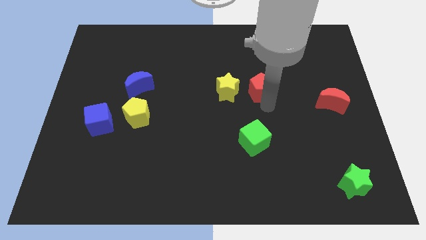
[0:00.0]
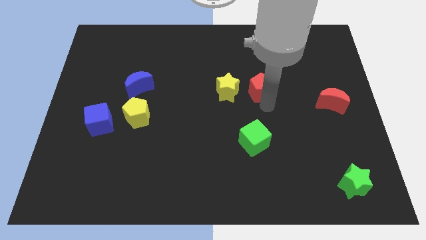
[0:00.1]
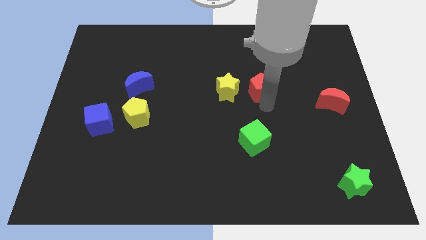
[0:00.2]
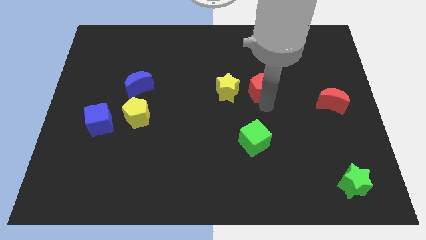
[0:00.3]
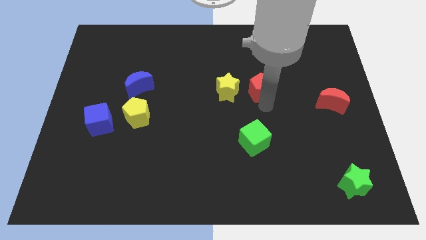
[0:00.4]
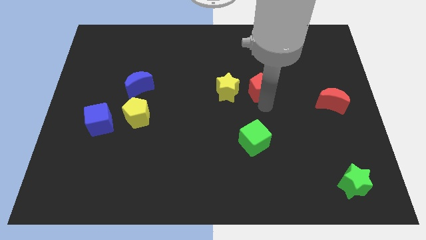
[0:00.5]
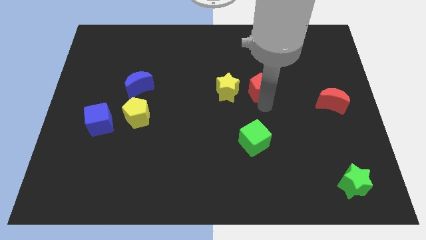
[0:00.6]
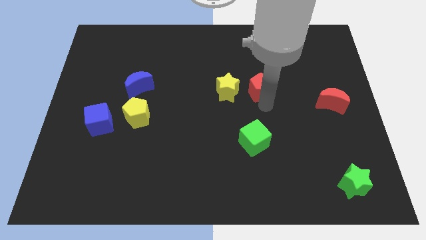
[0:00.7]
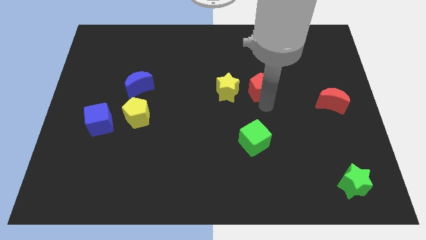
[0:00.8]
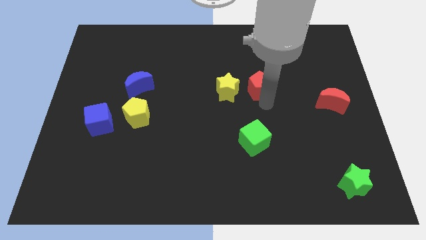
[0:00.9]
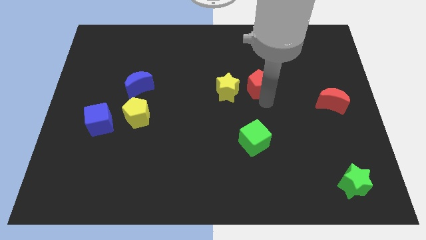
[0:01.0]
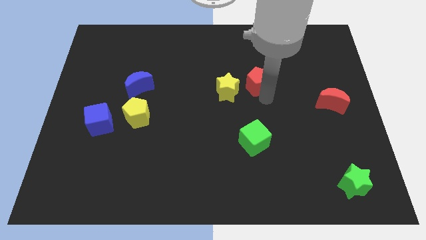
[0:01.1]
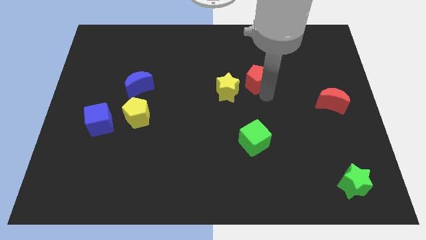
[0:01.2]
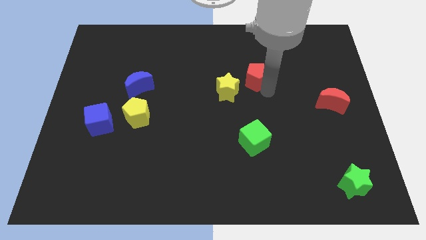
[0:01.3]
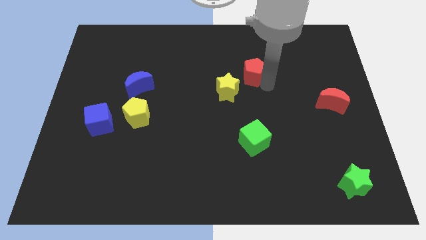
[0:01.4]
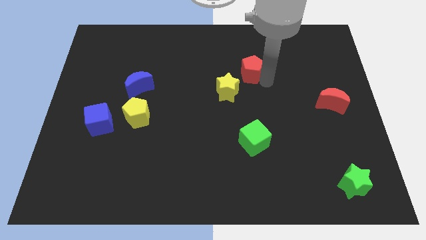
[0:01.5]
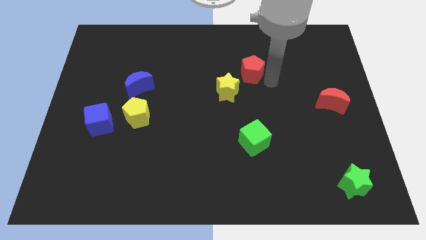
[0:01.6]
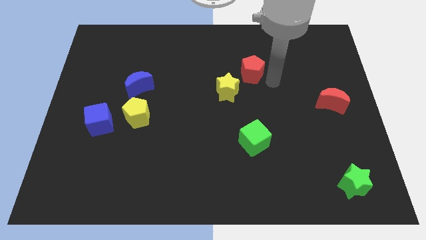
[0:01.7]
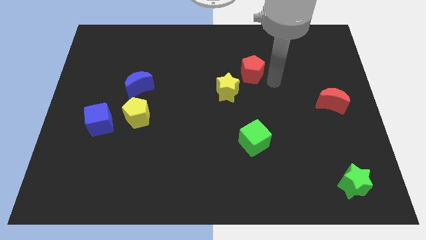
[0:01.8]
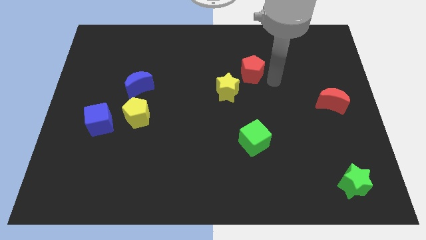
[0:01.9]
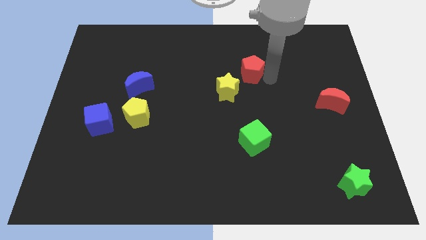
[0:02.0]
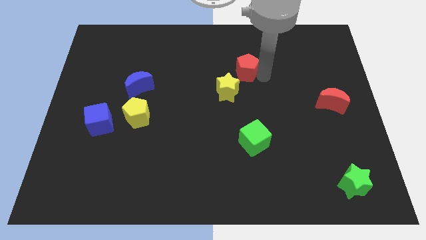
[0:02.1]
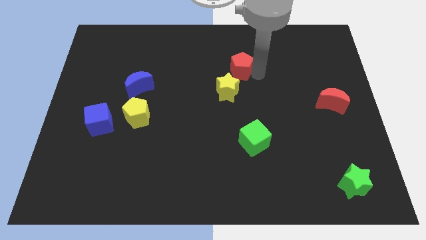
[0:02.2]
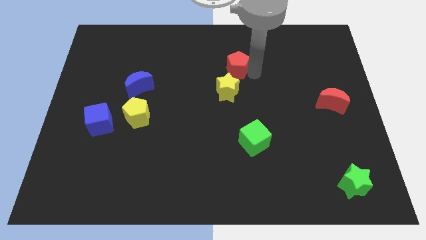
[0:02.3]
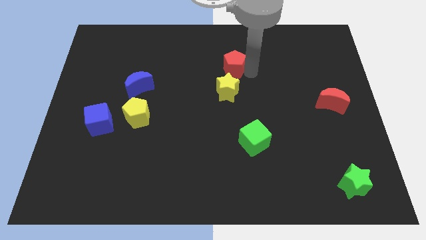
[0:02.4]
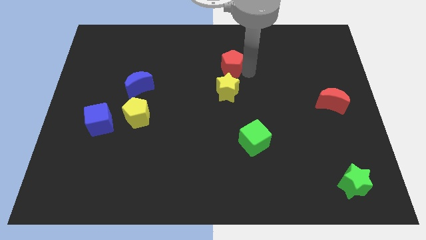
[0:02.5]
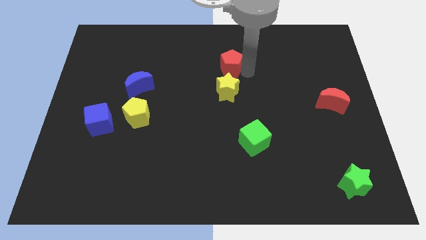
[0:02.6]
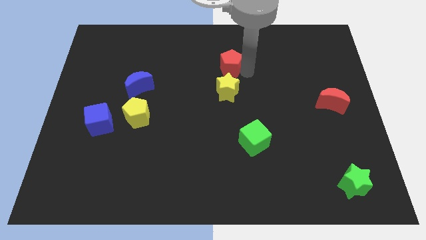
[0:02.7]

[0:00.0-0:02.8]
push the red pentagon slightly to the left

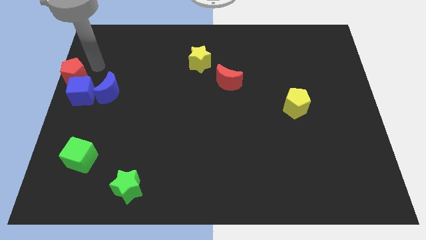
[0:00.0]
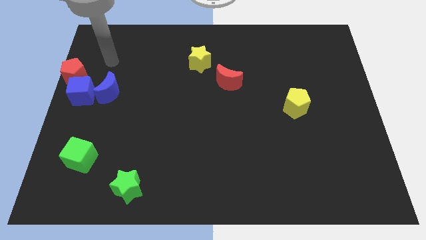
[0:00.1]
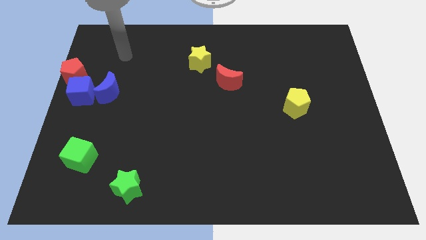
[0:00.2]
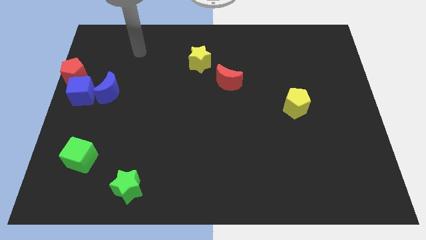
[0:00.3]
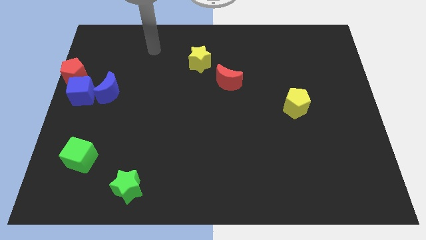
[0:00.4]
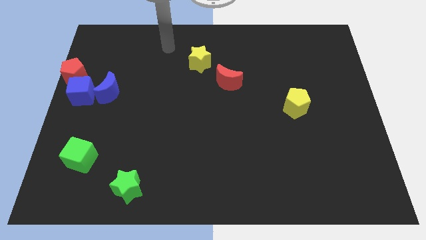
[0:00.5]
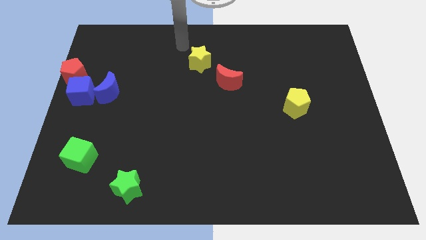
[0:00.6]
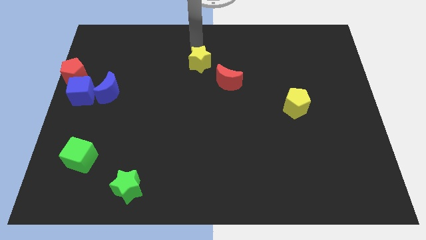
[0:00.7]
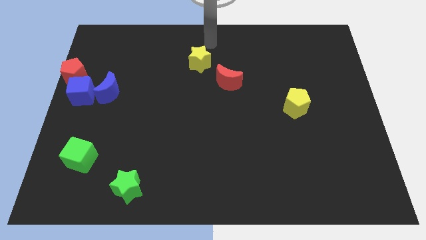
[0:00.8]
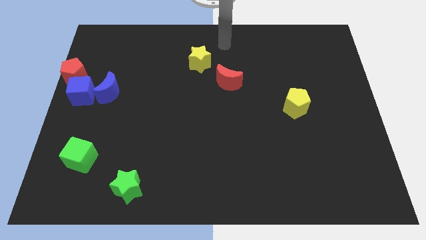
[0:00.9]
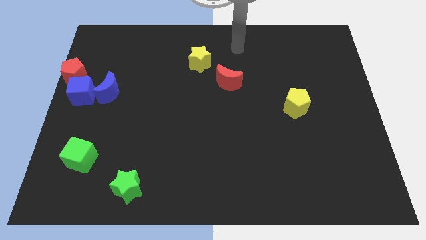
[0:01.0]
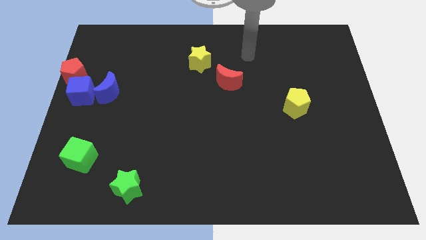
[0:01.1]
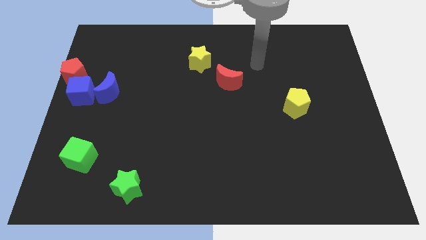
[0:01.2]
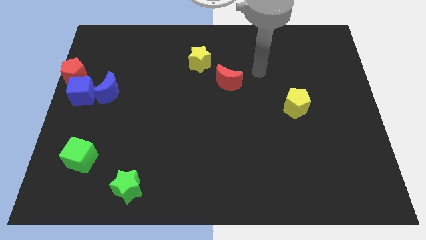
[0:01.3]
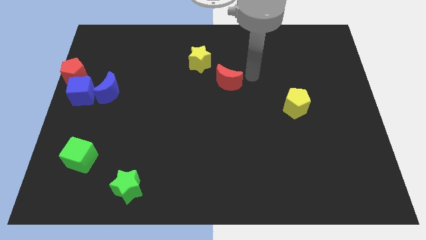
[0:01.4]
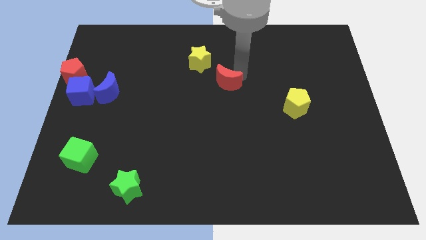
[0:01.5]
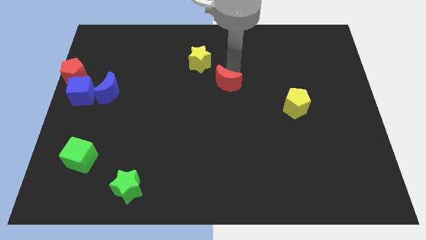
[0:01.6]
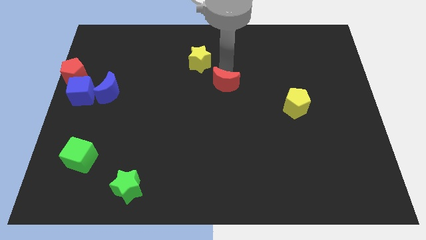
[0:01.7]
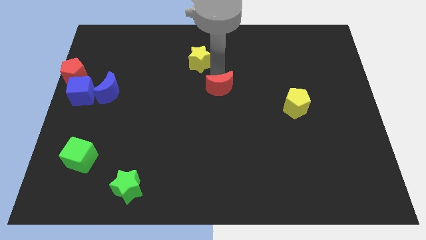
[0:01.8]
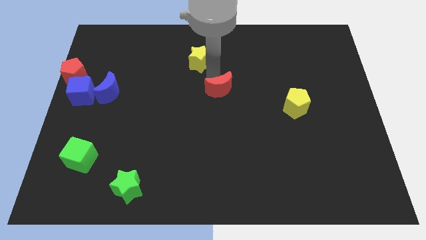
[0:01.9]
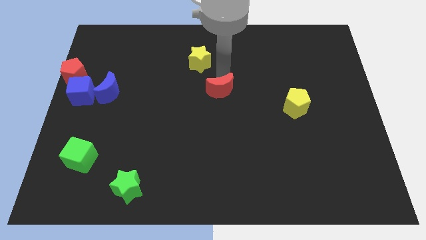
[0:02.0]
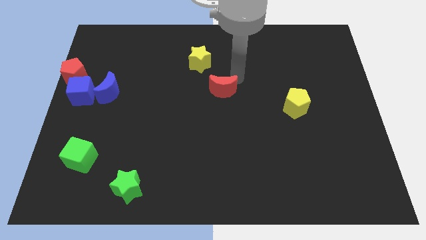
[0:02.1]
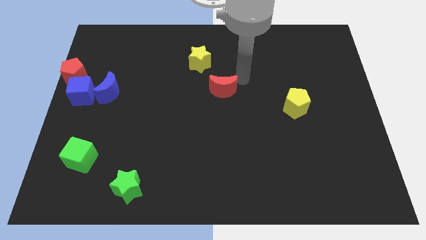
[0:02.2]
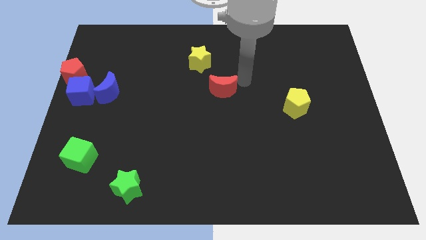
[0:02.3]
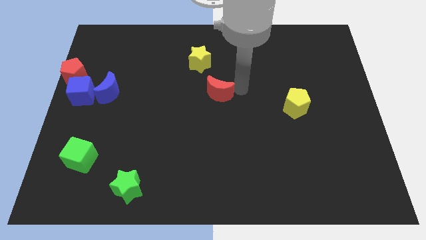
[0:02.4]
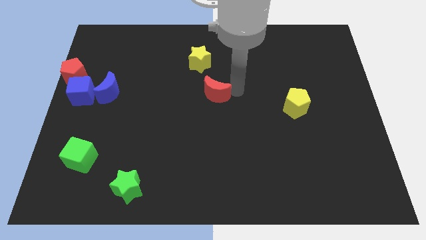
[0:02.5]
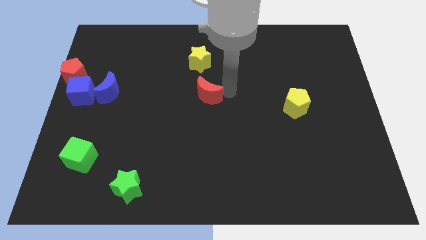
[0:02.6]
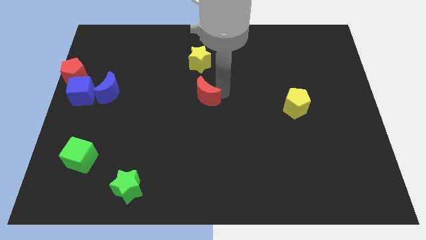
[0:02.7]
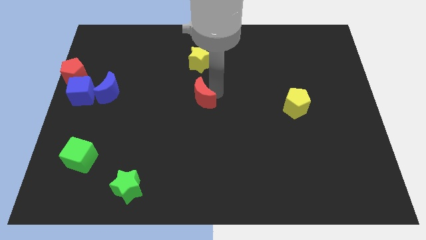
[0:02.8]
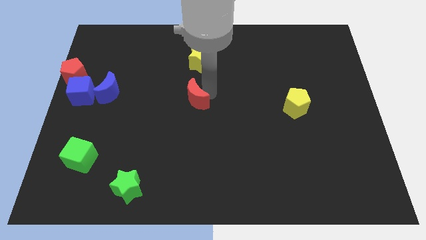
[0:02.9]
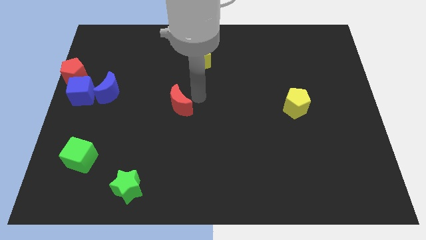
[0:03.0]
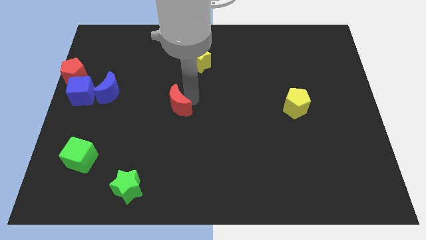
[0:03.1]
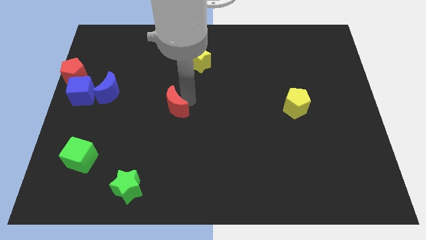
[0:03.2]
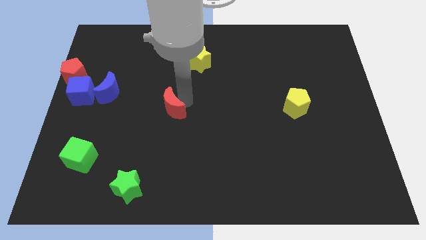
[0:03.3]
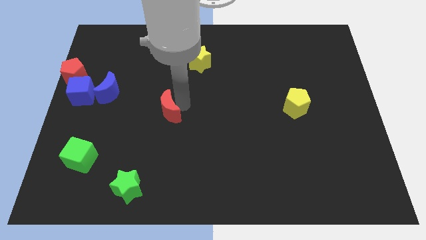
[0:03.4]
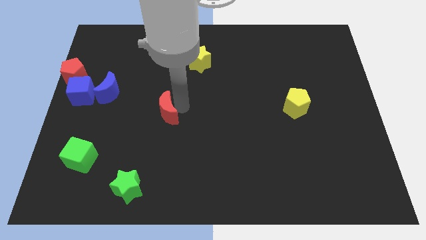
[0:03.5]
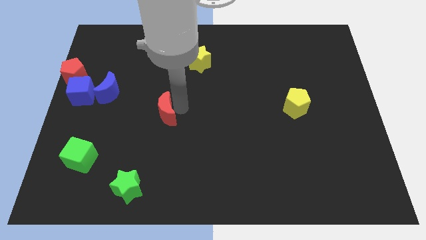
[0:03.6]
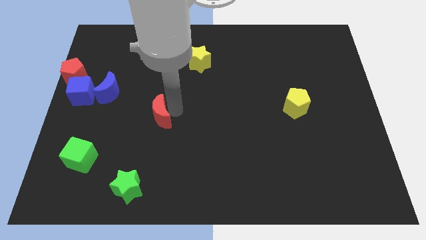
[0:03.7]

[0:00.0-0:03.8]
place the red moon diagonally to green cube

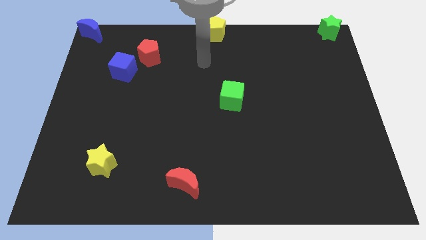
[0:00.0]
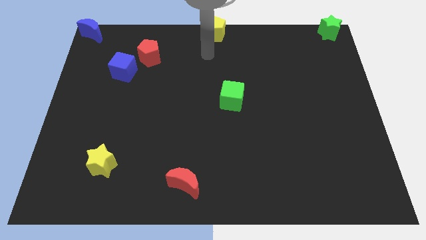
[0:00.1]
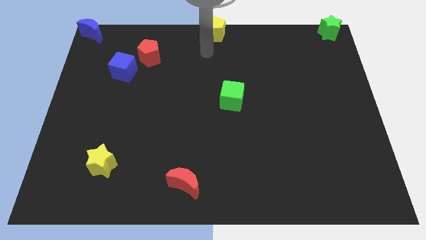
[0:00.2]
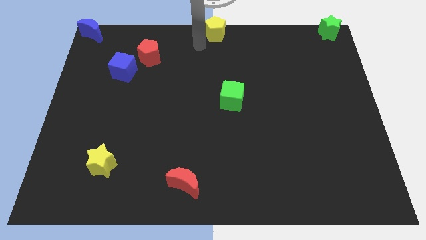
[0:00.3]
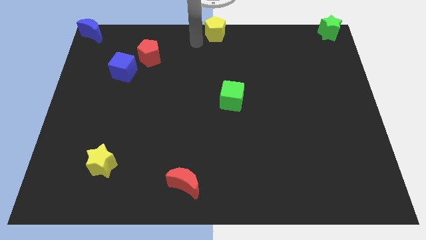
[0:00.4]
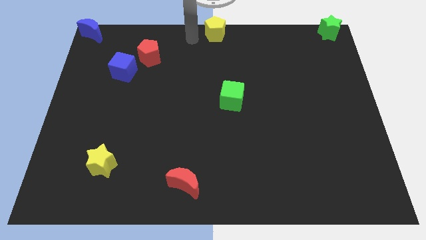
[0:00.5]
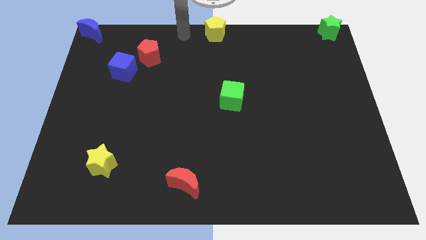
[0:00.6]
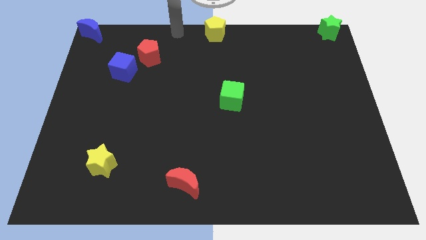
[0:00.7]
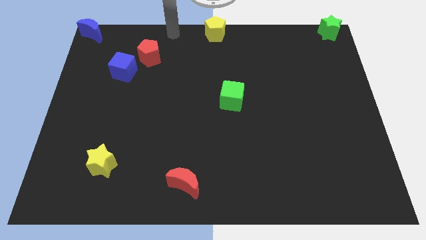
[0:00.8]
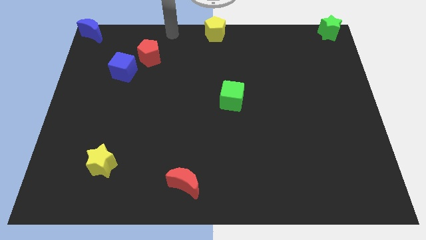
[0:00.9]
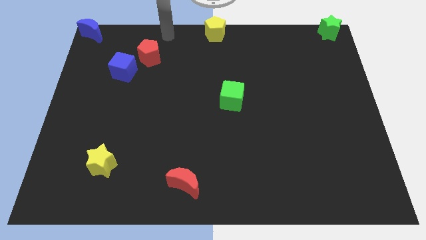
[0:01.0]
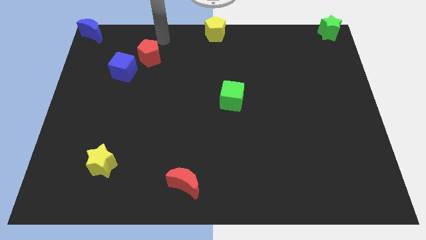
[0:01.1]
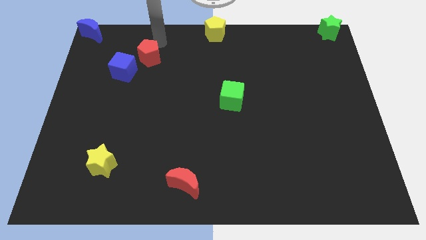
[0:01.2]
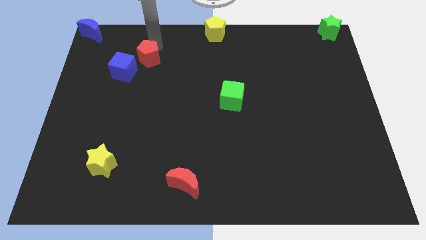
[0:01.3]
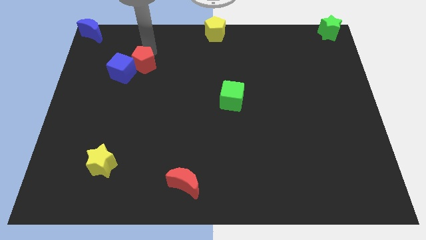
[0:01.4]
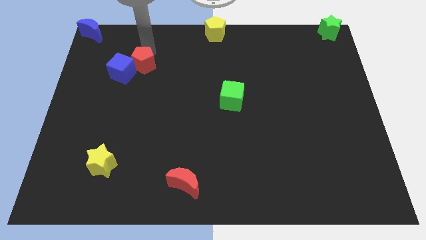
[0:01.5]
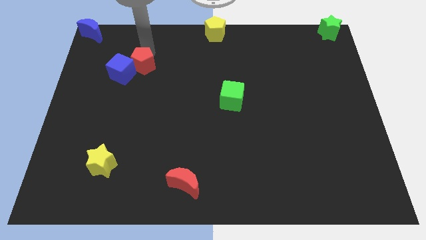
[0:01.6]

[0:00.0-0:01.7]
move the arm towards the red pentagon

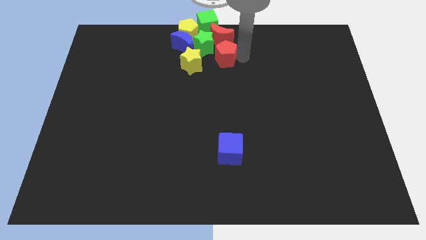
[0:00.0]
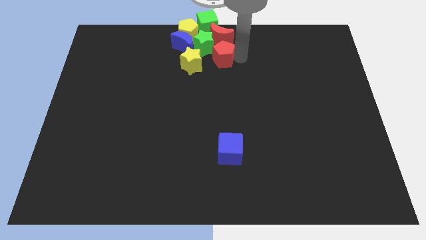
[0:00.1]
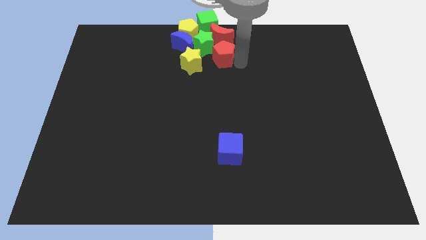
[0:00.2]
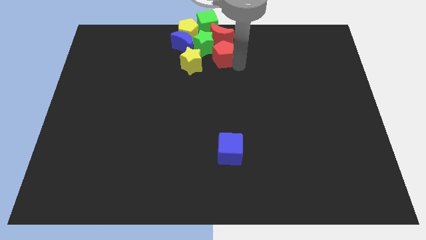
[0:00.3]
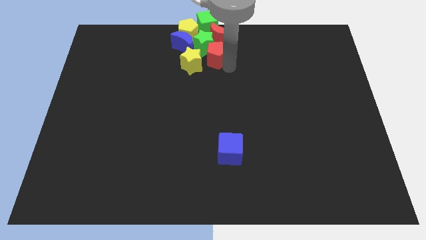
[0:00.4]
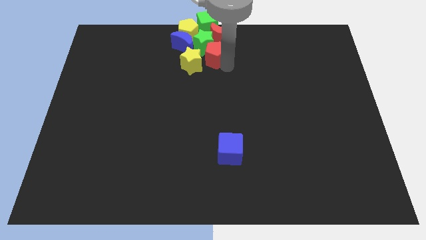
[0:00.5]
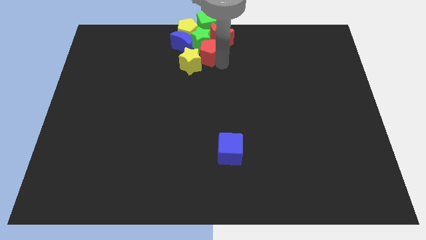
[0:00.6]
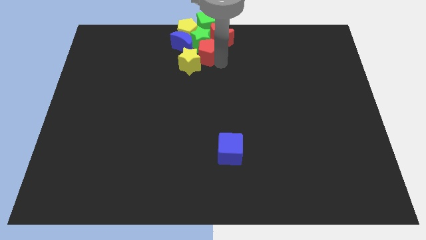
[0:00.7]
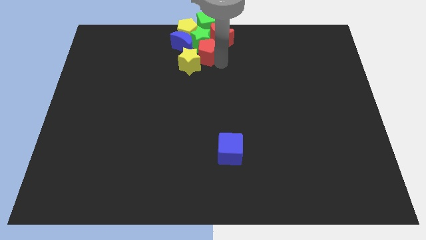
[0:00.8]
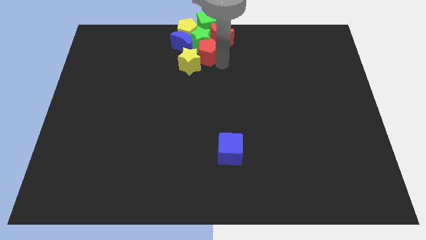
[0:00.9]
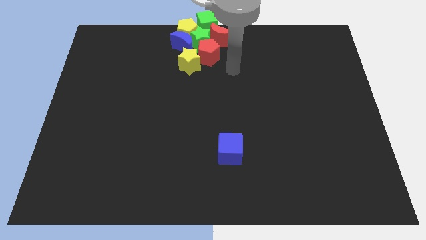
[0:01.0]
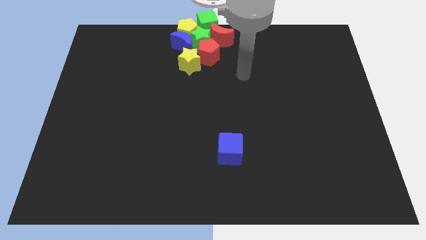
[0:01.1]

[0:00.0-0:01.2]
place the red pentagon to the bottom of the green star
